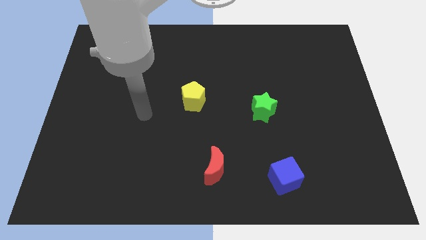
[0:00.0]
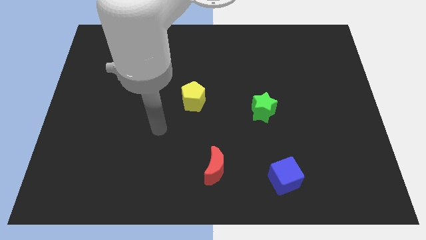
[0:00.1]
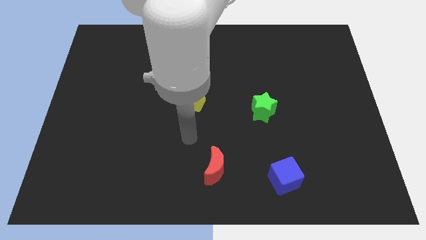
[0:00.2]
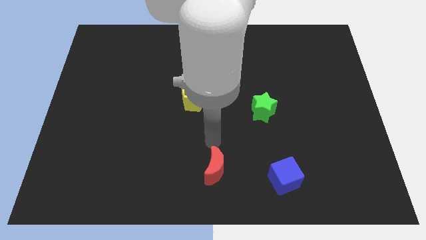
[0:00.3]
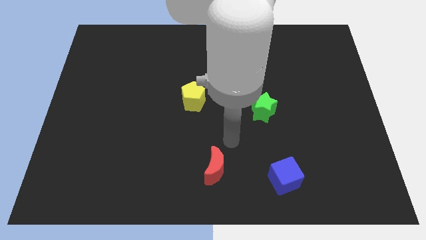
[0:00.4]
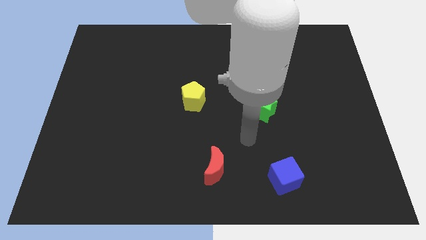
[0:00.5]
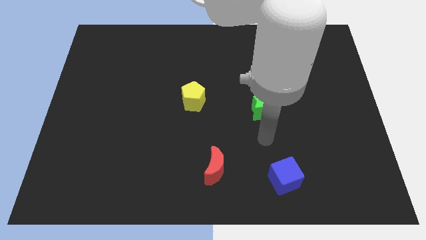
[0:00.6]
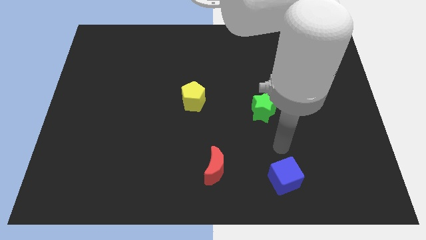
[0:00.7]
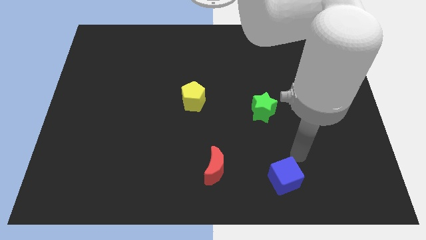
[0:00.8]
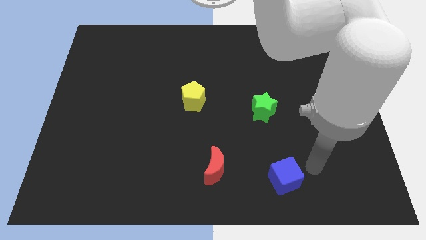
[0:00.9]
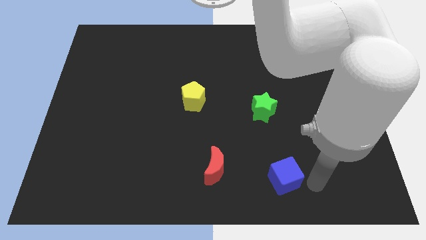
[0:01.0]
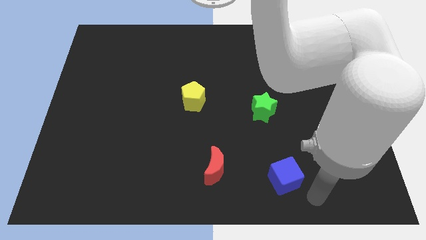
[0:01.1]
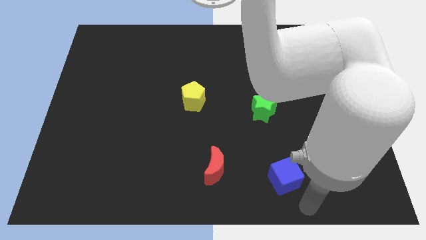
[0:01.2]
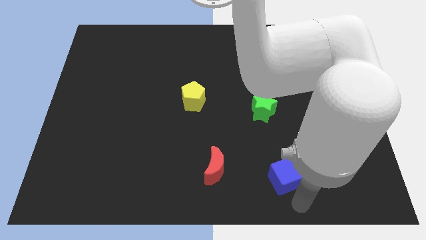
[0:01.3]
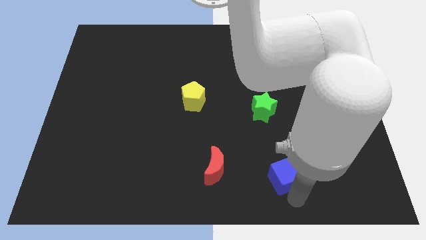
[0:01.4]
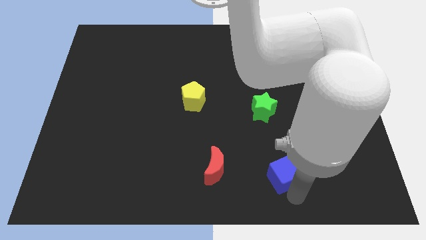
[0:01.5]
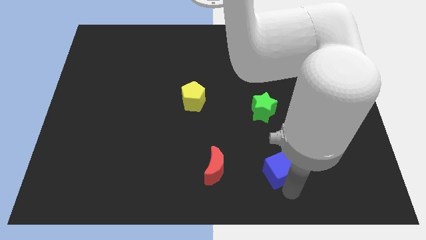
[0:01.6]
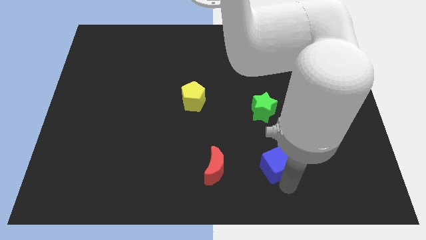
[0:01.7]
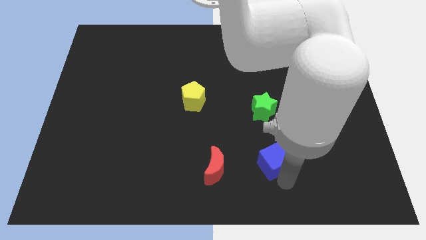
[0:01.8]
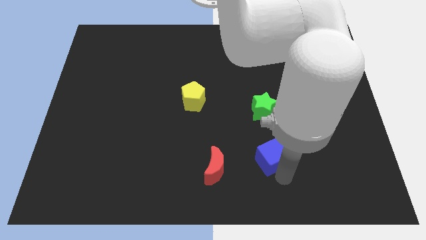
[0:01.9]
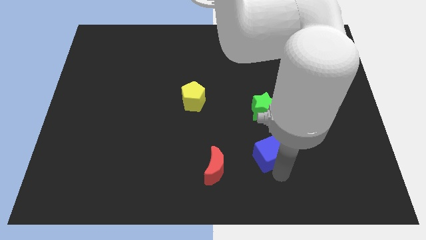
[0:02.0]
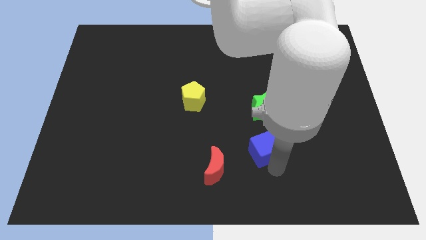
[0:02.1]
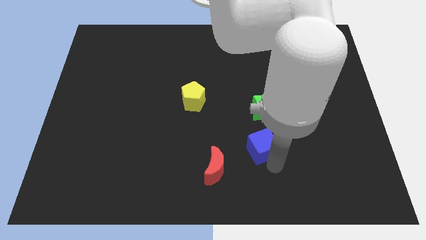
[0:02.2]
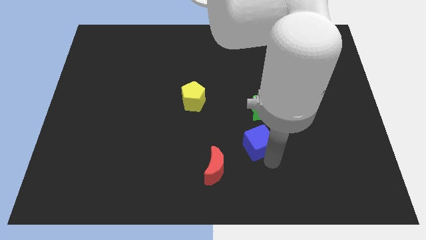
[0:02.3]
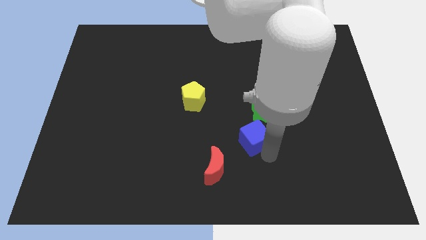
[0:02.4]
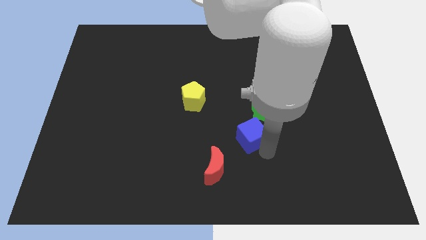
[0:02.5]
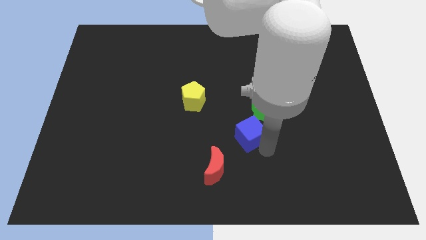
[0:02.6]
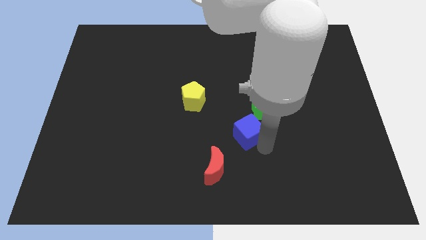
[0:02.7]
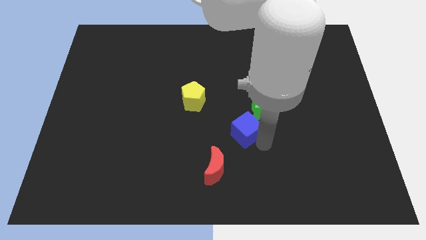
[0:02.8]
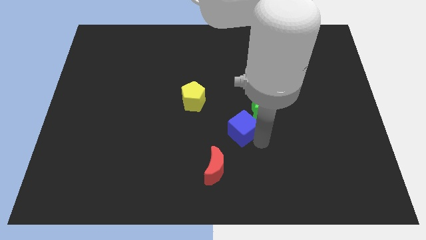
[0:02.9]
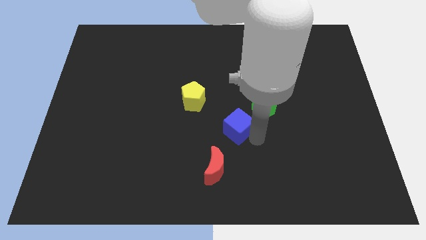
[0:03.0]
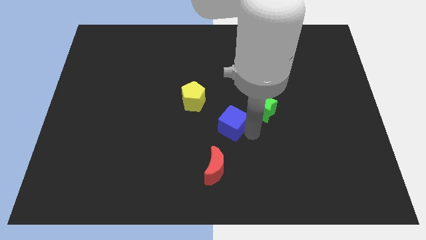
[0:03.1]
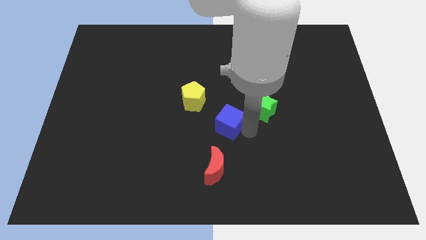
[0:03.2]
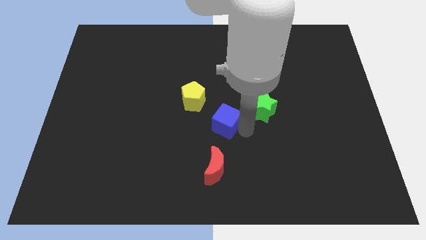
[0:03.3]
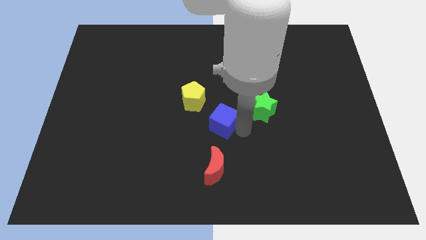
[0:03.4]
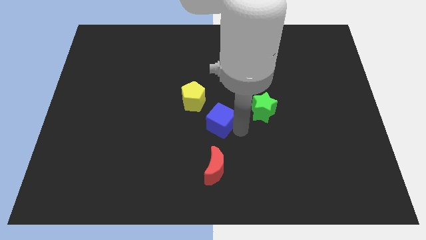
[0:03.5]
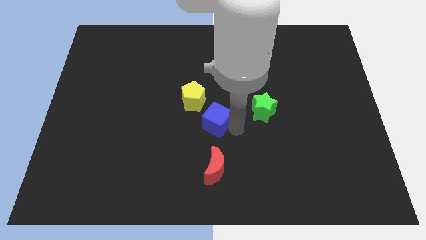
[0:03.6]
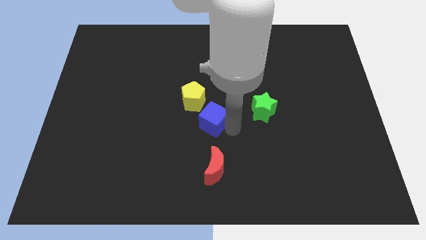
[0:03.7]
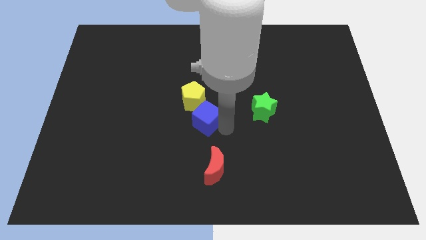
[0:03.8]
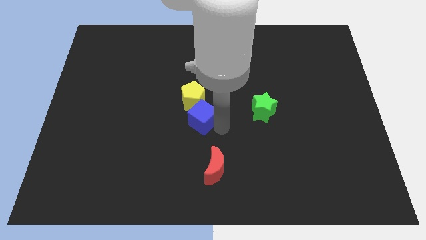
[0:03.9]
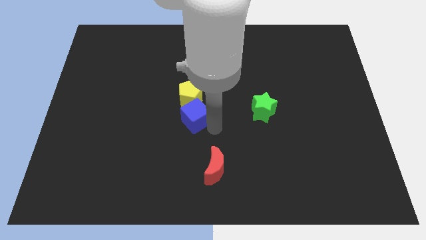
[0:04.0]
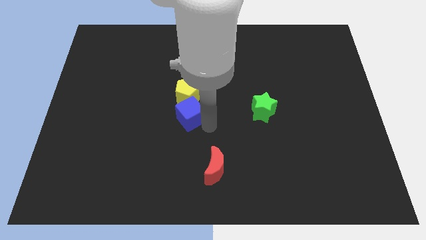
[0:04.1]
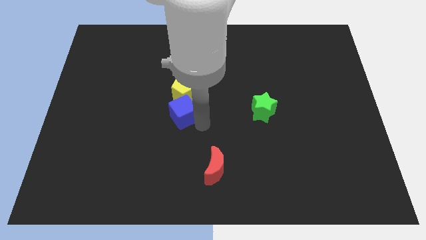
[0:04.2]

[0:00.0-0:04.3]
slide the cube next to the yellow block

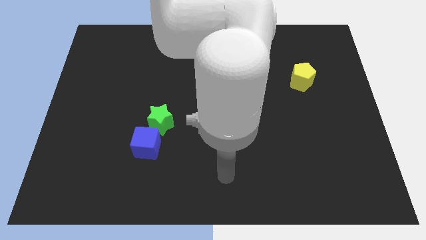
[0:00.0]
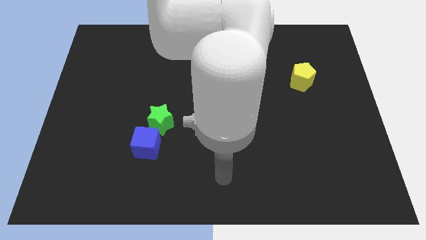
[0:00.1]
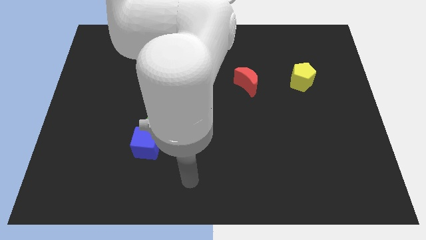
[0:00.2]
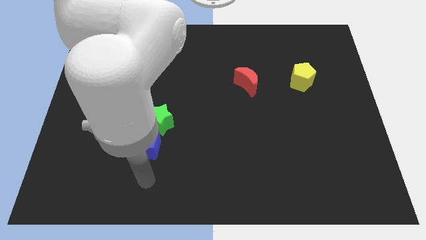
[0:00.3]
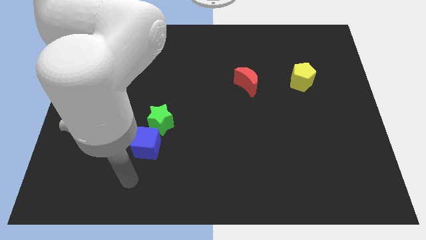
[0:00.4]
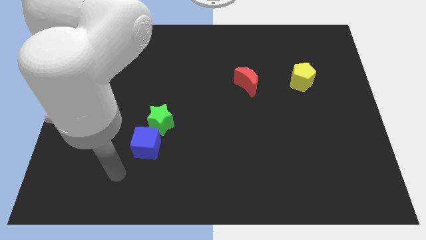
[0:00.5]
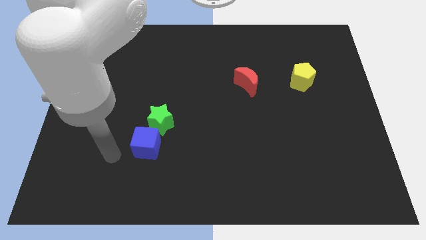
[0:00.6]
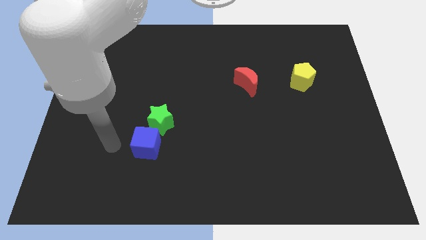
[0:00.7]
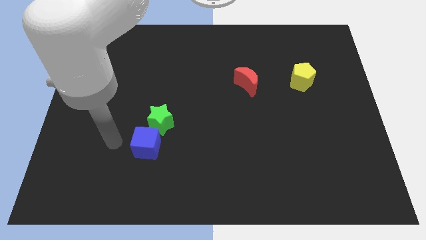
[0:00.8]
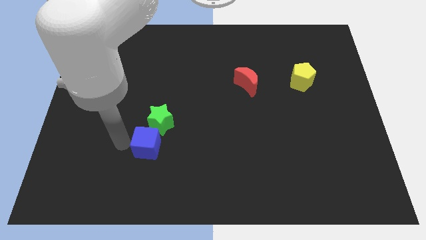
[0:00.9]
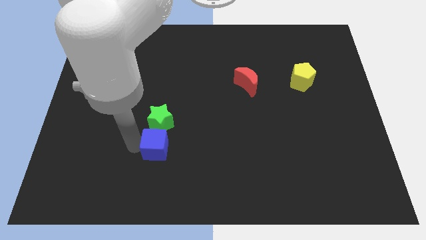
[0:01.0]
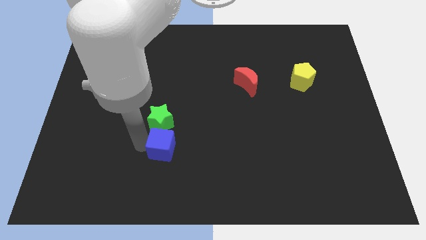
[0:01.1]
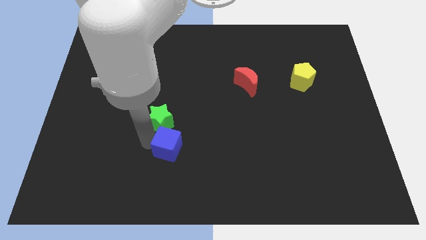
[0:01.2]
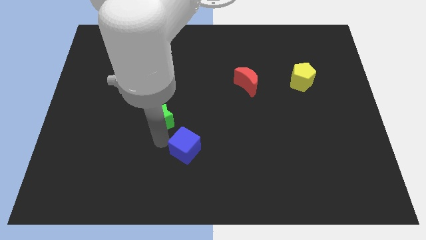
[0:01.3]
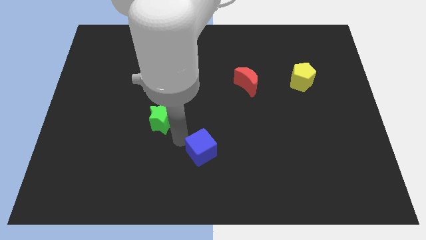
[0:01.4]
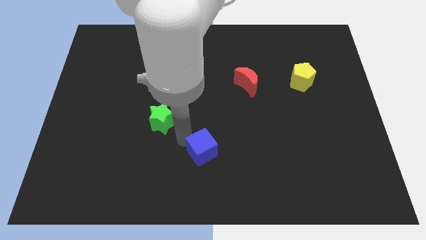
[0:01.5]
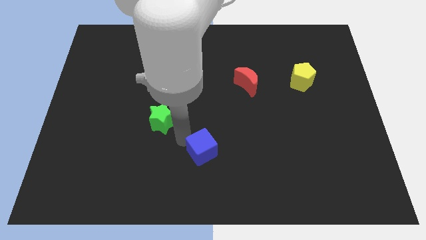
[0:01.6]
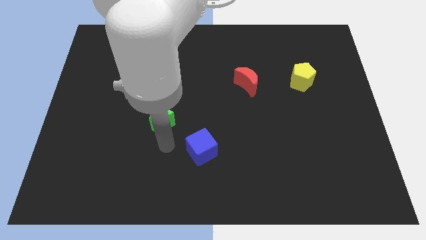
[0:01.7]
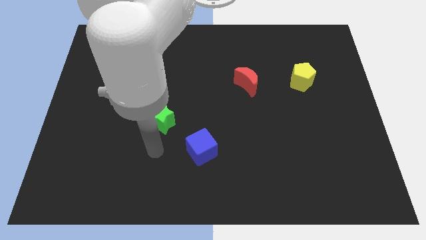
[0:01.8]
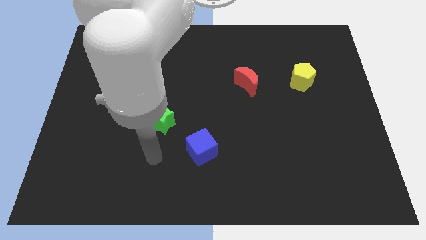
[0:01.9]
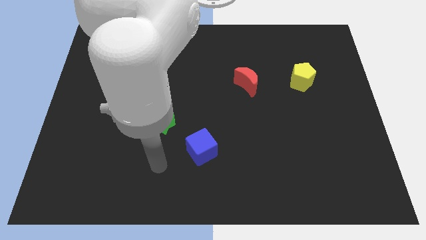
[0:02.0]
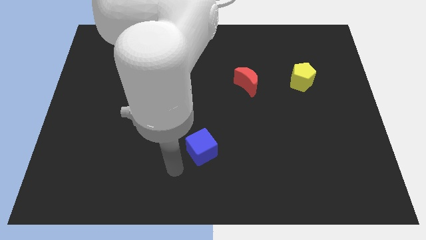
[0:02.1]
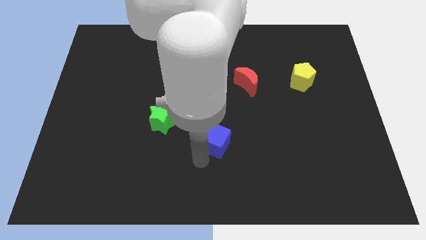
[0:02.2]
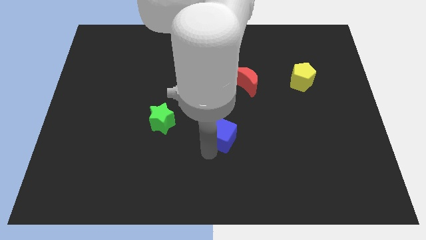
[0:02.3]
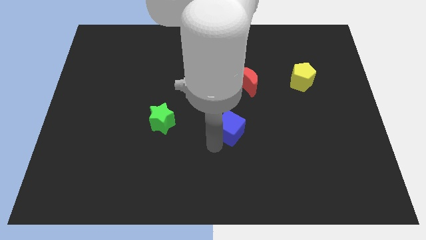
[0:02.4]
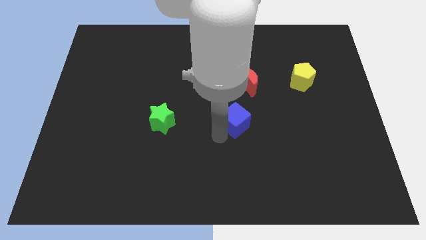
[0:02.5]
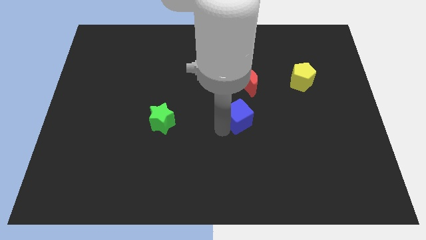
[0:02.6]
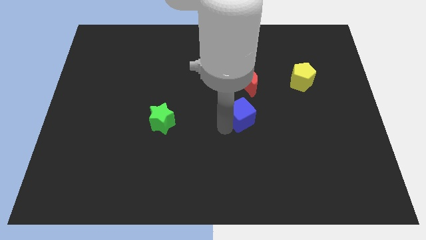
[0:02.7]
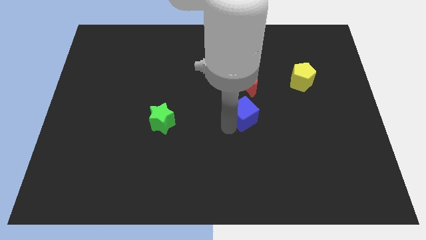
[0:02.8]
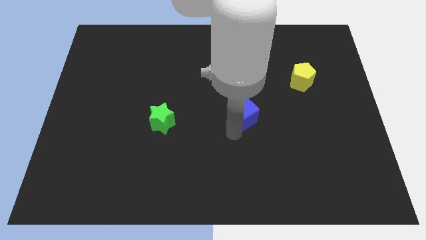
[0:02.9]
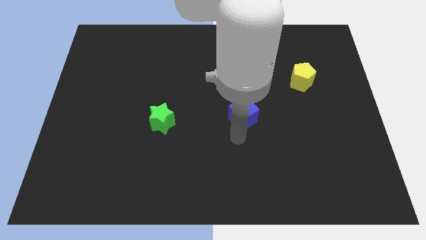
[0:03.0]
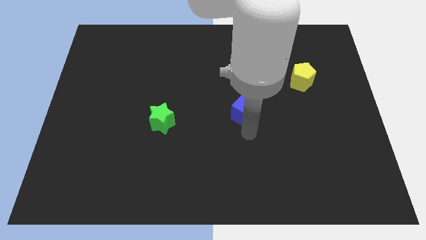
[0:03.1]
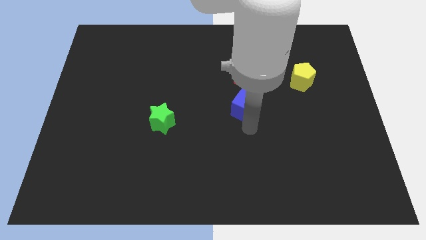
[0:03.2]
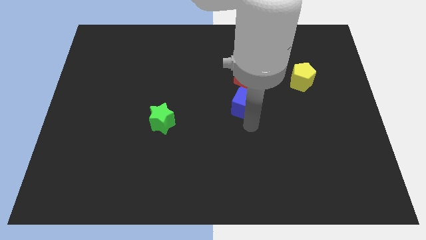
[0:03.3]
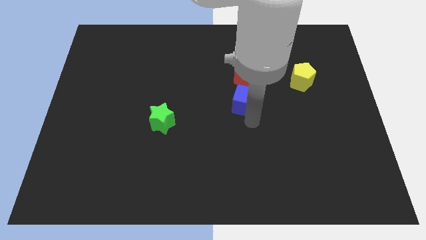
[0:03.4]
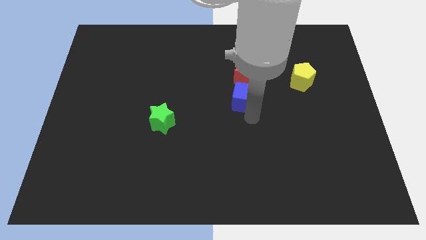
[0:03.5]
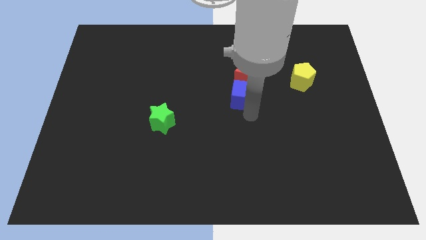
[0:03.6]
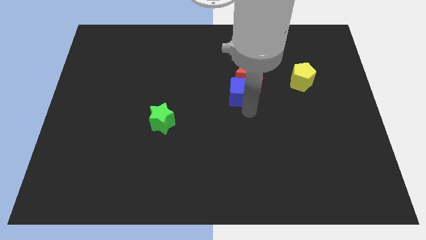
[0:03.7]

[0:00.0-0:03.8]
move the blue block close to the red moon

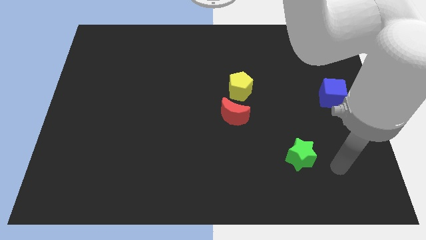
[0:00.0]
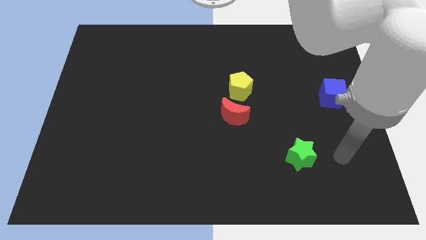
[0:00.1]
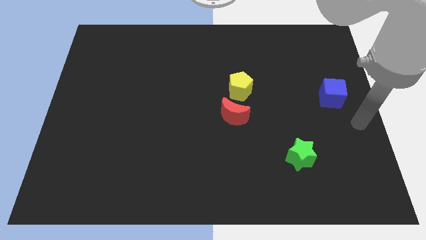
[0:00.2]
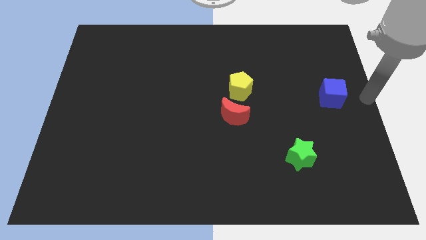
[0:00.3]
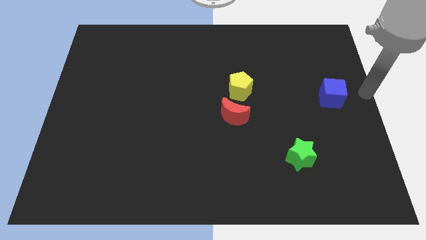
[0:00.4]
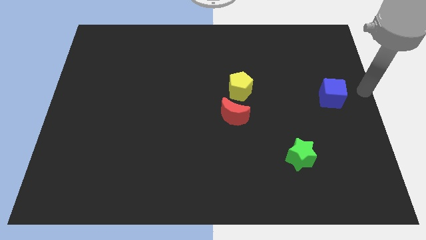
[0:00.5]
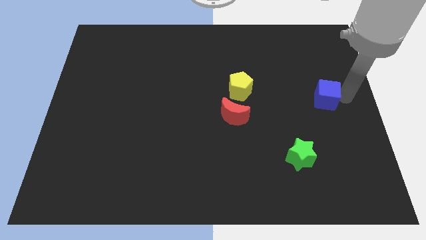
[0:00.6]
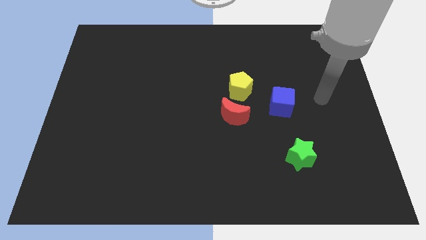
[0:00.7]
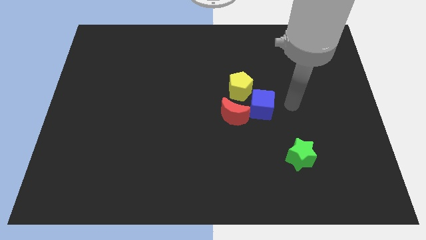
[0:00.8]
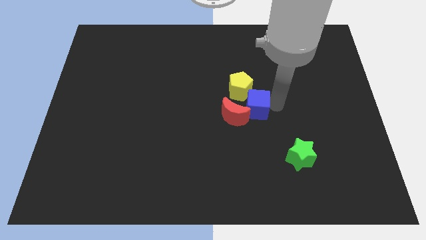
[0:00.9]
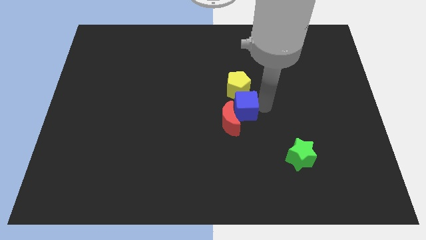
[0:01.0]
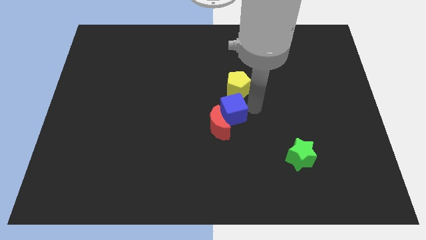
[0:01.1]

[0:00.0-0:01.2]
push the blue block next to the red moon
